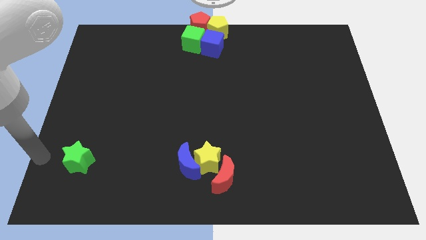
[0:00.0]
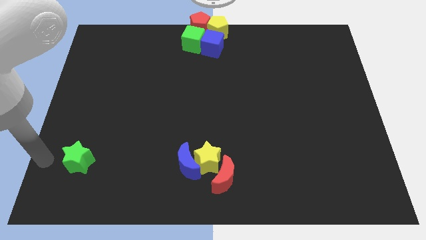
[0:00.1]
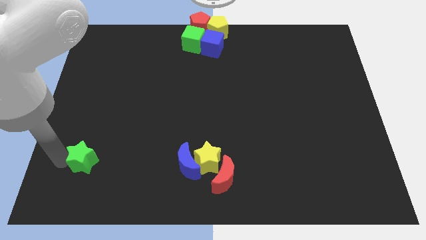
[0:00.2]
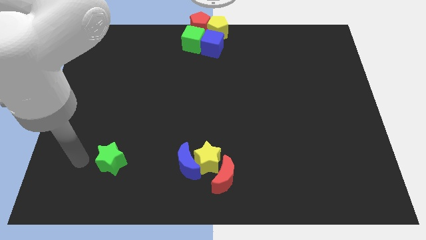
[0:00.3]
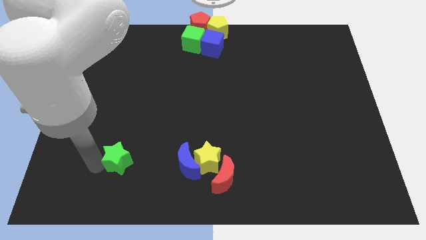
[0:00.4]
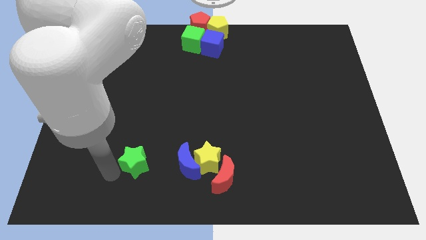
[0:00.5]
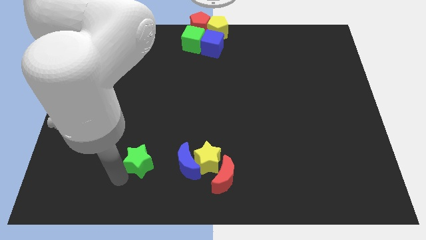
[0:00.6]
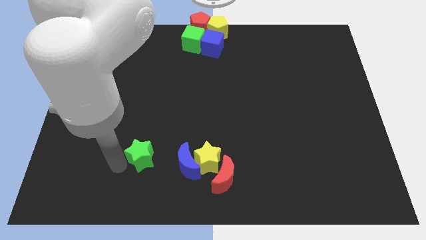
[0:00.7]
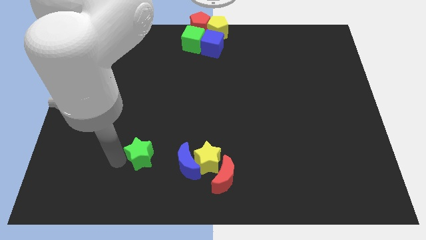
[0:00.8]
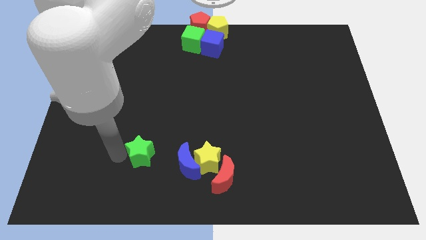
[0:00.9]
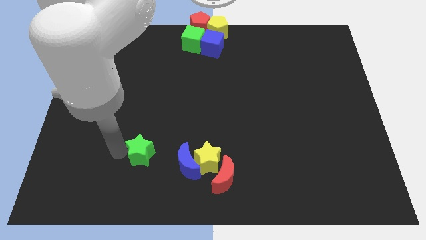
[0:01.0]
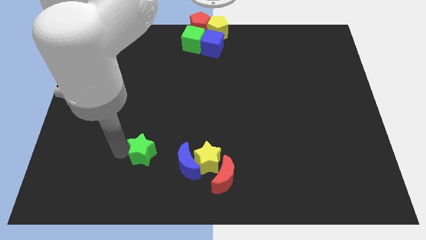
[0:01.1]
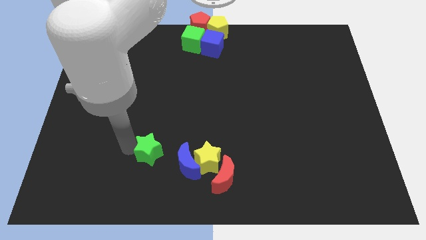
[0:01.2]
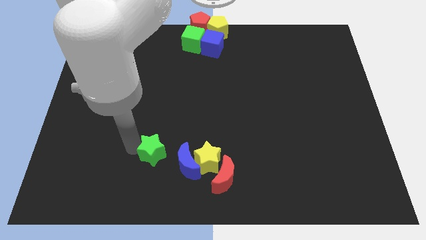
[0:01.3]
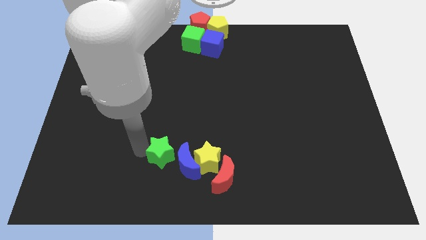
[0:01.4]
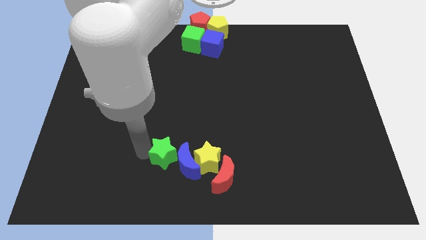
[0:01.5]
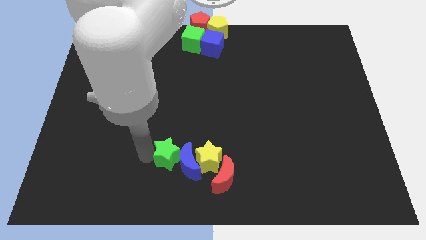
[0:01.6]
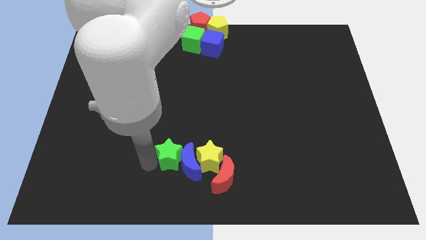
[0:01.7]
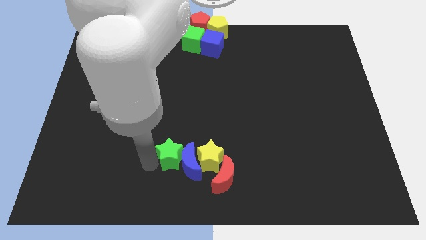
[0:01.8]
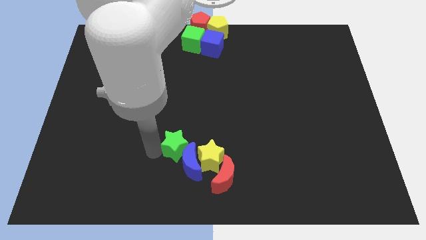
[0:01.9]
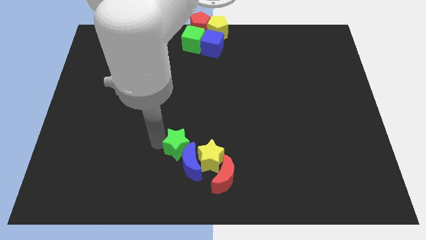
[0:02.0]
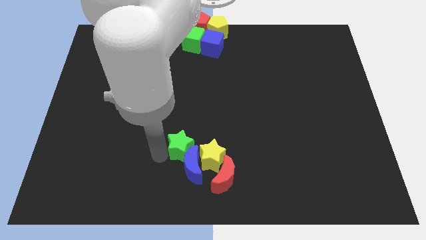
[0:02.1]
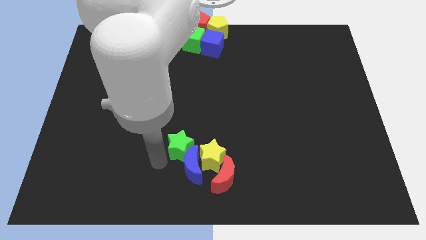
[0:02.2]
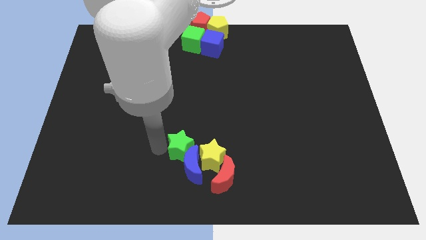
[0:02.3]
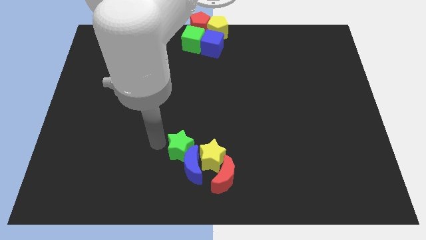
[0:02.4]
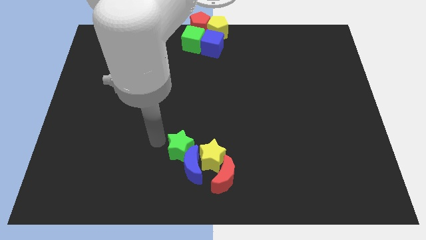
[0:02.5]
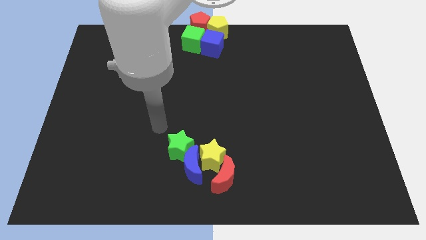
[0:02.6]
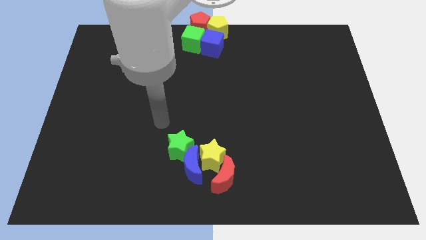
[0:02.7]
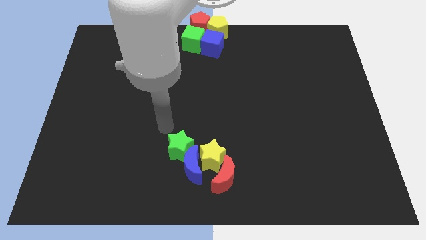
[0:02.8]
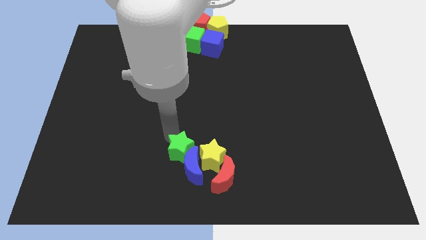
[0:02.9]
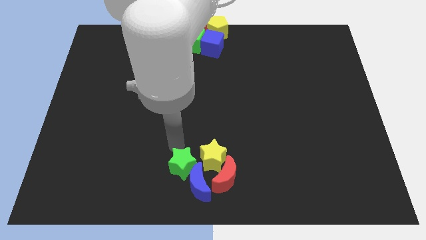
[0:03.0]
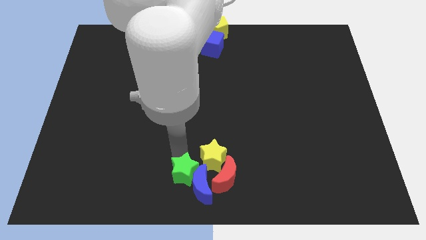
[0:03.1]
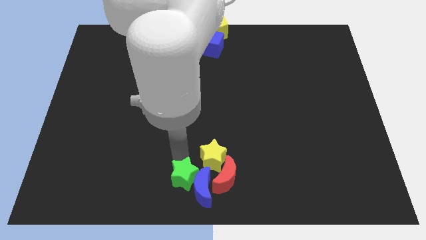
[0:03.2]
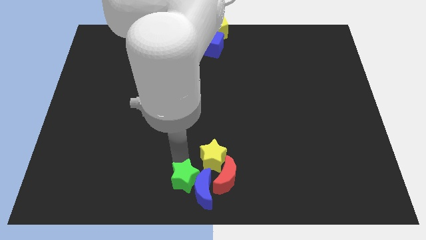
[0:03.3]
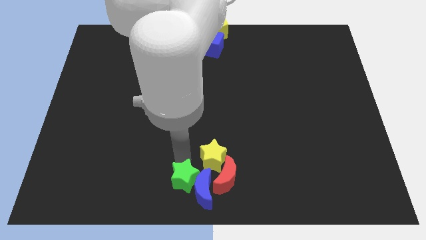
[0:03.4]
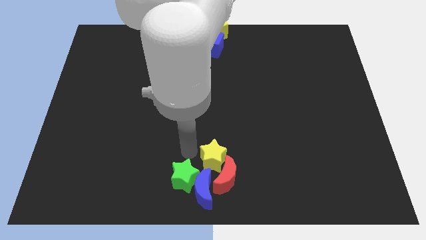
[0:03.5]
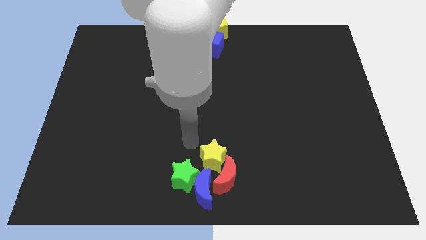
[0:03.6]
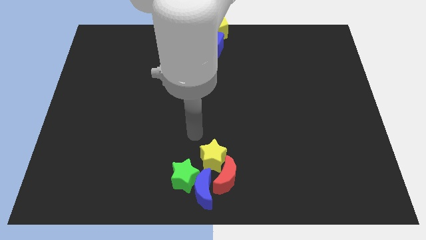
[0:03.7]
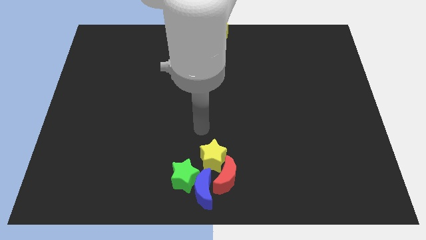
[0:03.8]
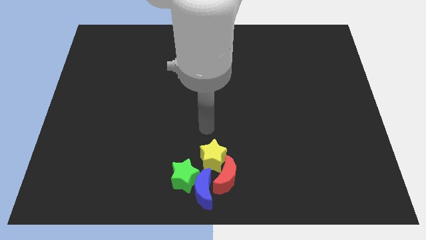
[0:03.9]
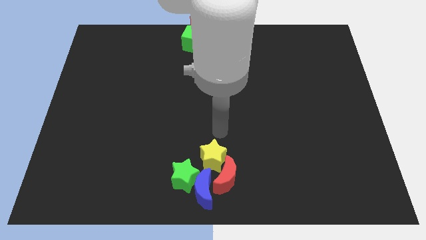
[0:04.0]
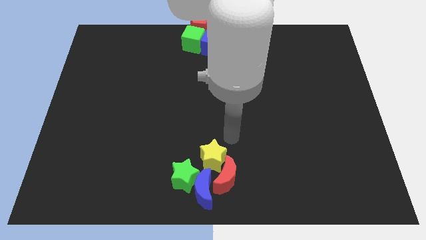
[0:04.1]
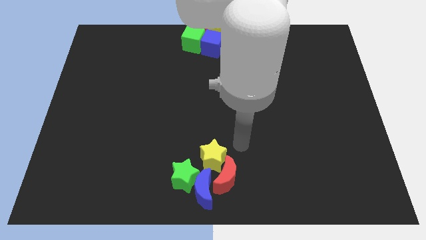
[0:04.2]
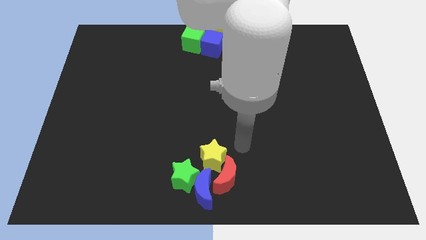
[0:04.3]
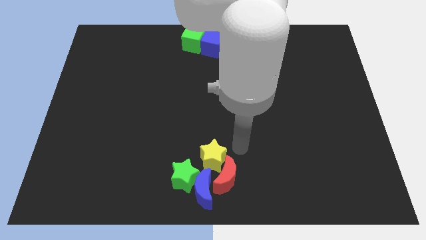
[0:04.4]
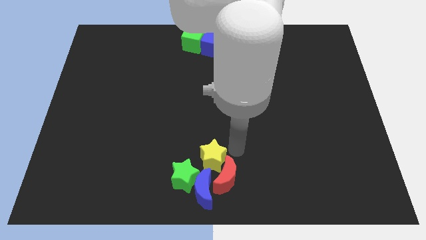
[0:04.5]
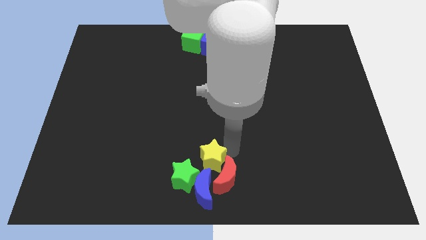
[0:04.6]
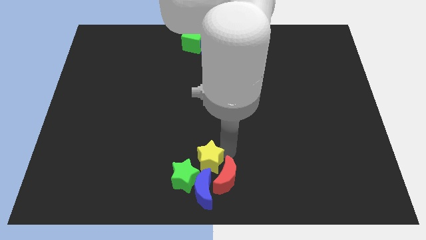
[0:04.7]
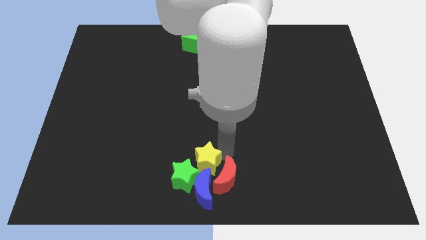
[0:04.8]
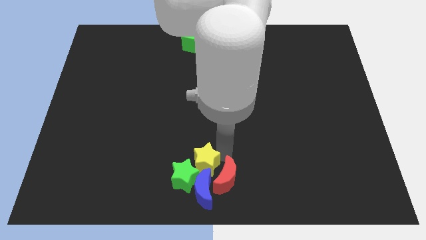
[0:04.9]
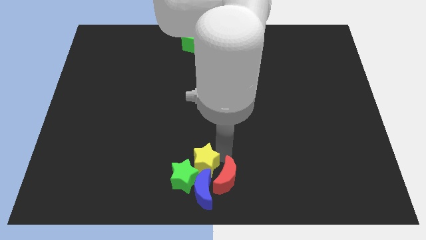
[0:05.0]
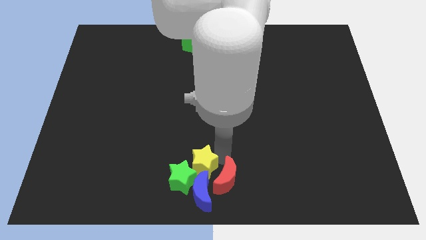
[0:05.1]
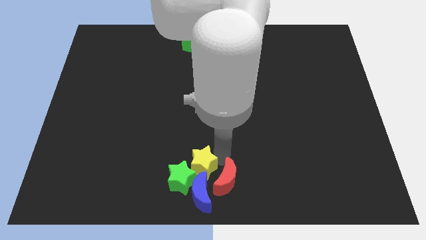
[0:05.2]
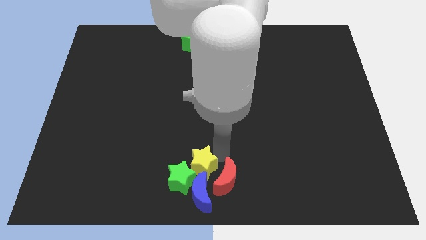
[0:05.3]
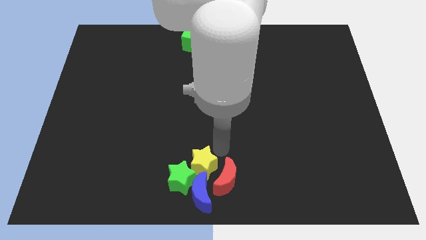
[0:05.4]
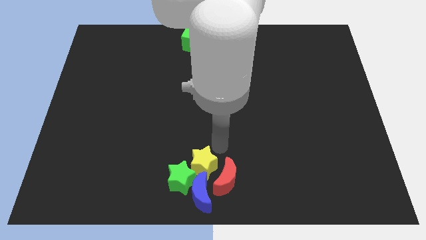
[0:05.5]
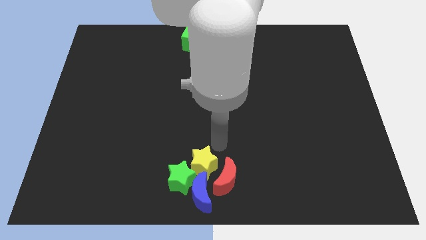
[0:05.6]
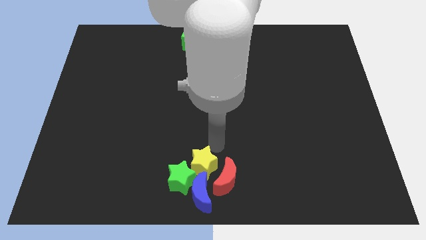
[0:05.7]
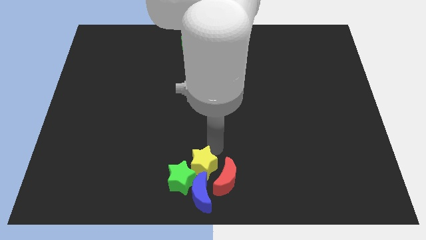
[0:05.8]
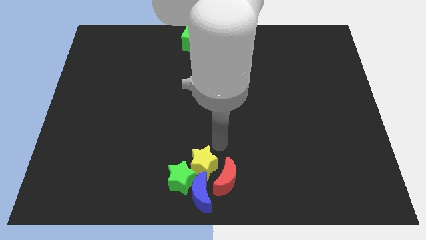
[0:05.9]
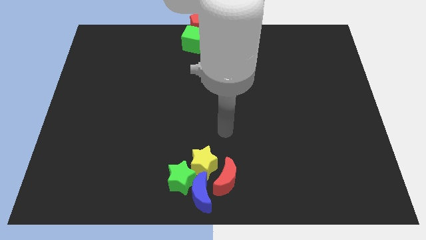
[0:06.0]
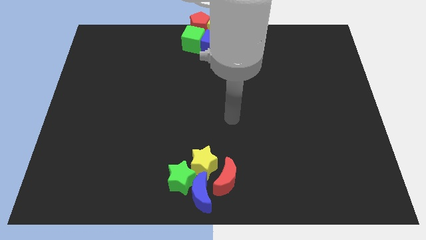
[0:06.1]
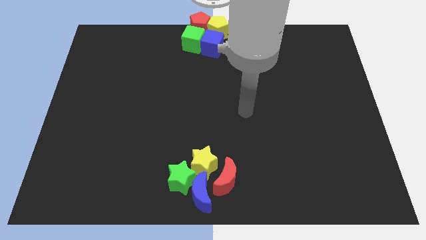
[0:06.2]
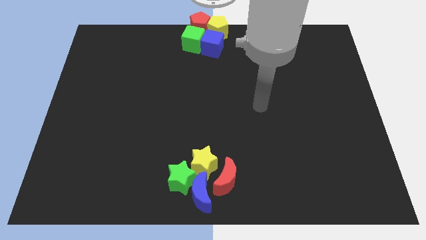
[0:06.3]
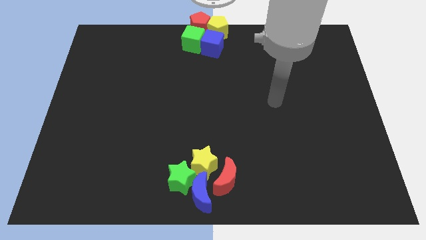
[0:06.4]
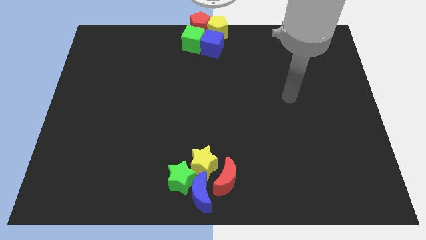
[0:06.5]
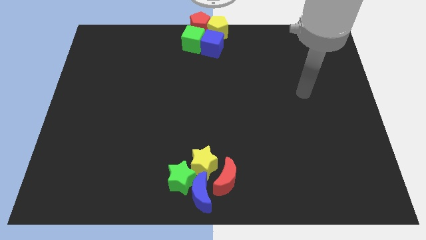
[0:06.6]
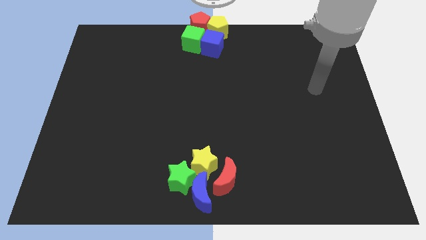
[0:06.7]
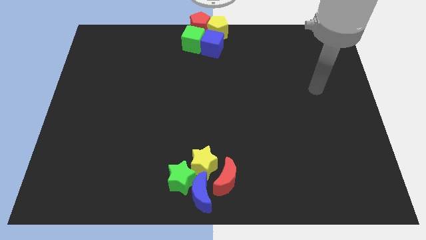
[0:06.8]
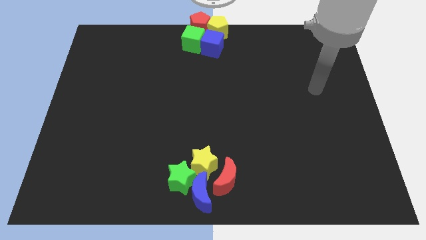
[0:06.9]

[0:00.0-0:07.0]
move the green star into the group of blocks at the bottom center of the board

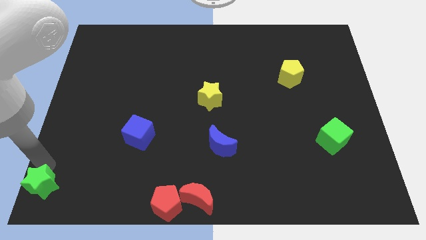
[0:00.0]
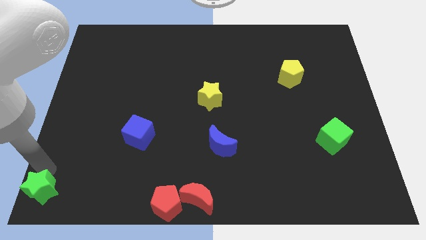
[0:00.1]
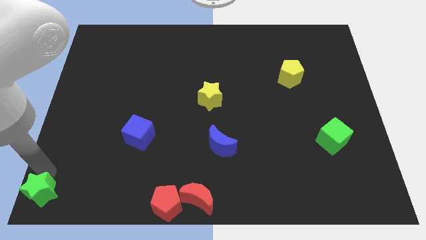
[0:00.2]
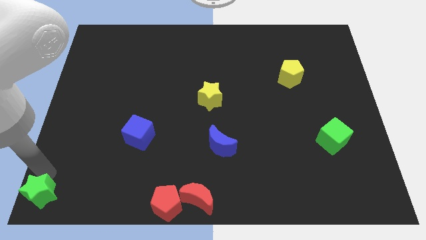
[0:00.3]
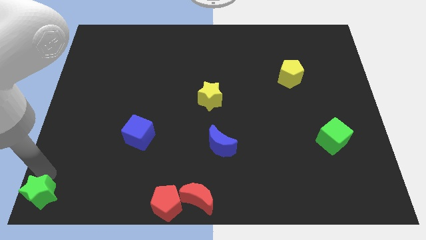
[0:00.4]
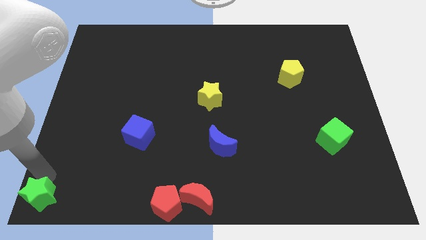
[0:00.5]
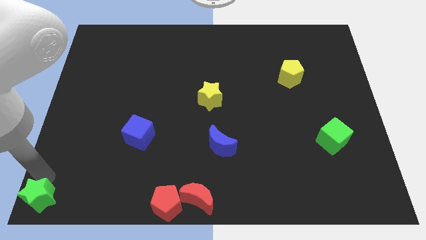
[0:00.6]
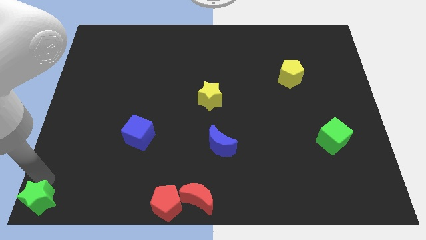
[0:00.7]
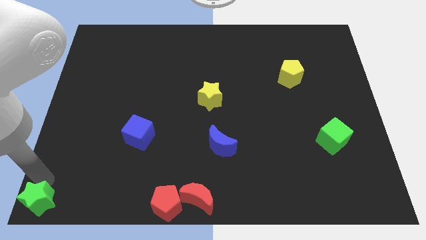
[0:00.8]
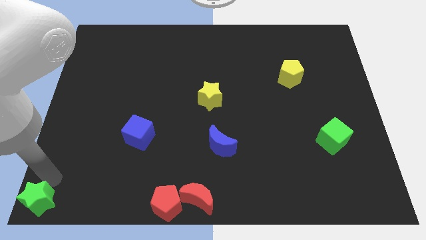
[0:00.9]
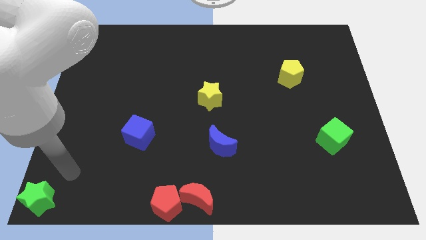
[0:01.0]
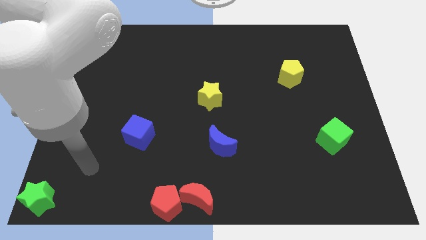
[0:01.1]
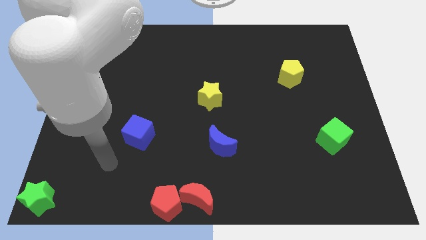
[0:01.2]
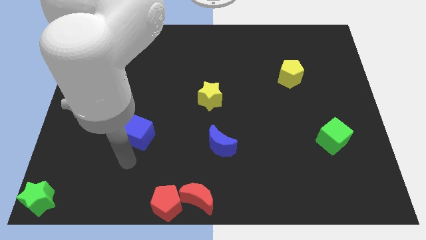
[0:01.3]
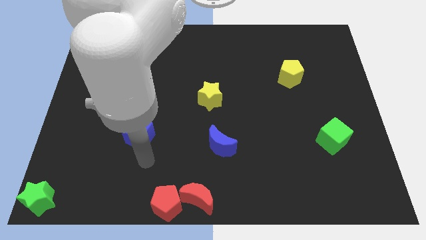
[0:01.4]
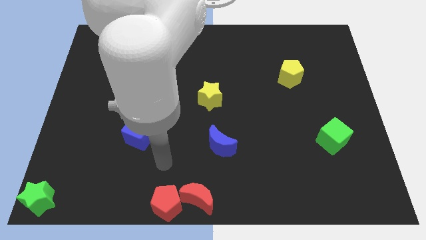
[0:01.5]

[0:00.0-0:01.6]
move your arm away from the green star

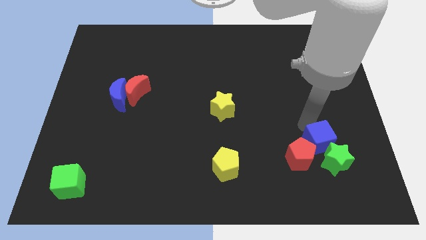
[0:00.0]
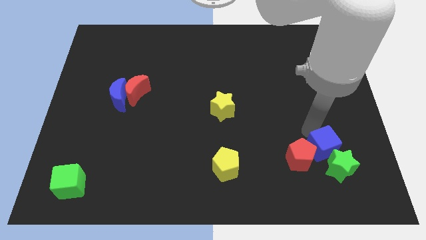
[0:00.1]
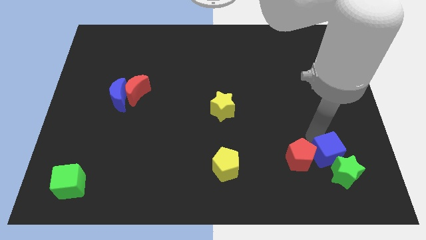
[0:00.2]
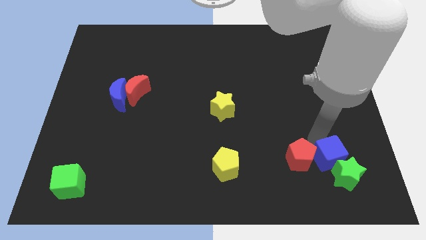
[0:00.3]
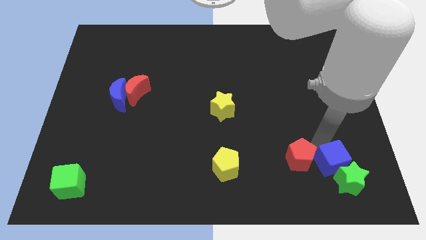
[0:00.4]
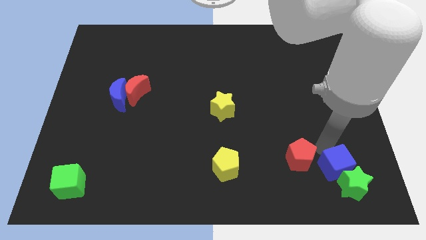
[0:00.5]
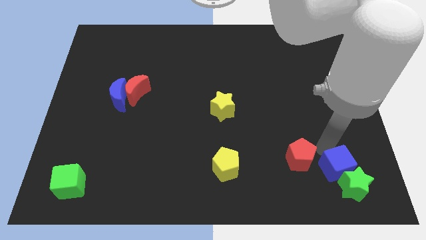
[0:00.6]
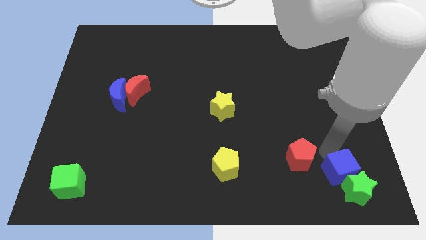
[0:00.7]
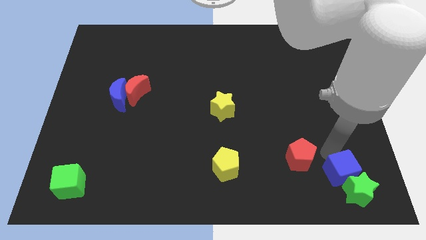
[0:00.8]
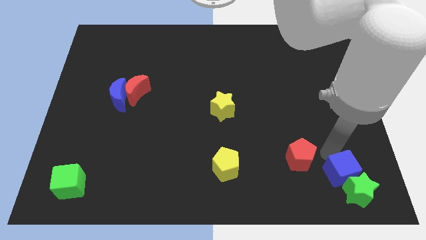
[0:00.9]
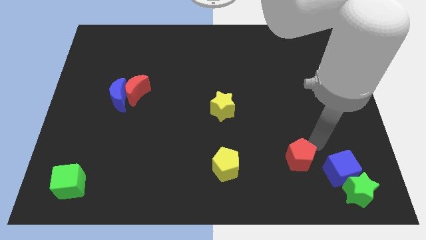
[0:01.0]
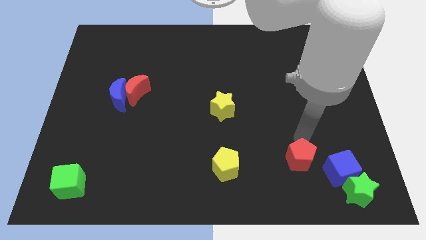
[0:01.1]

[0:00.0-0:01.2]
push the blue cube into the green star
